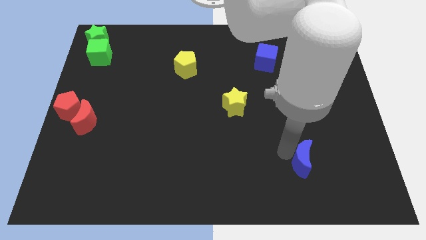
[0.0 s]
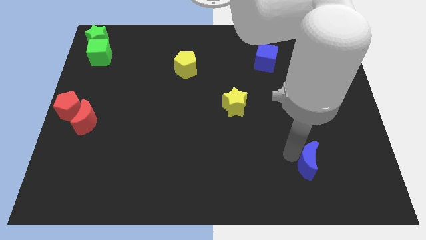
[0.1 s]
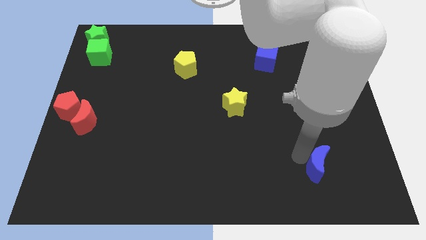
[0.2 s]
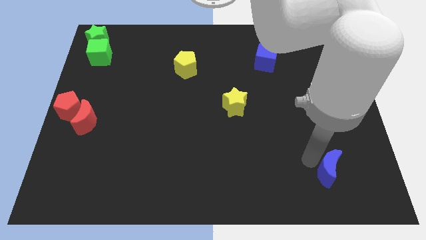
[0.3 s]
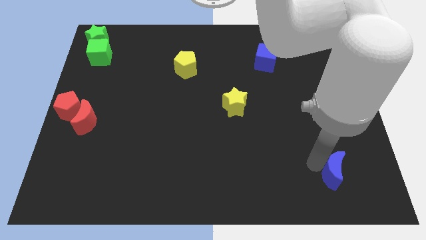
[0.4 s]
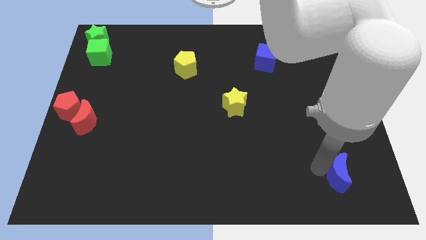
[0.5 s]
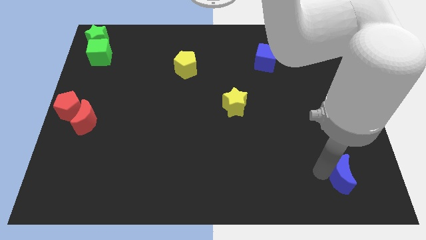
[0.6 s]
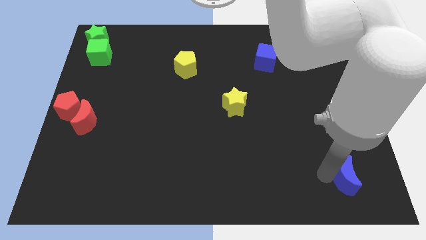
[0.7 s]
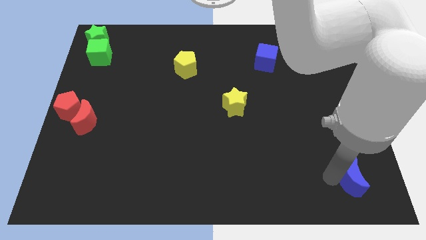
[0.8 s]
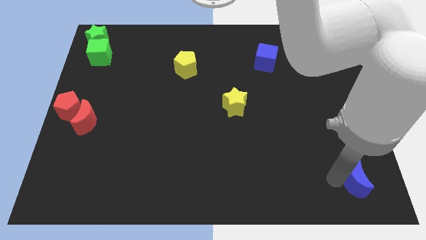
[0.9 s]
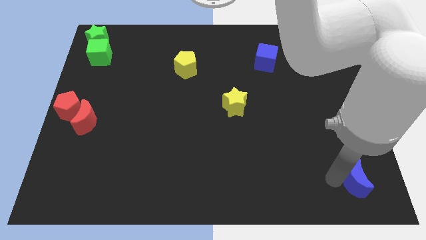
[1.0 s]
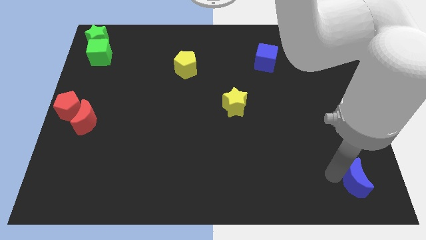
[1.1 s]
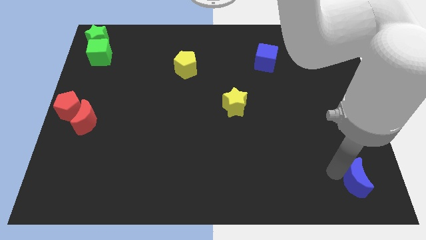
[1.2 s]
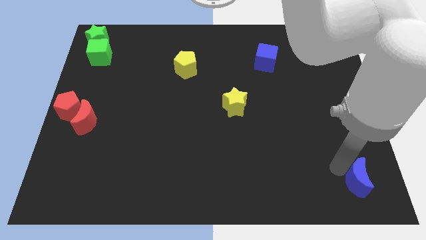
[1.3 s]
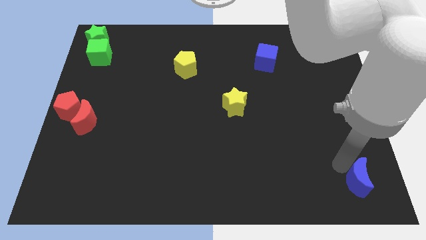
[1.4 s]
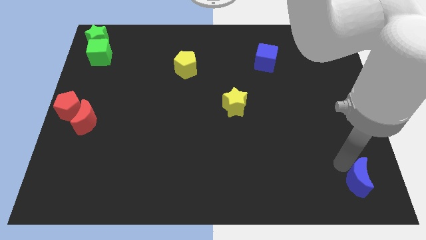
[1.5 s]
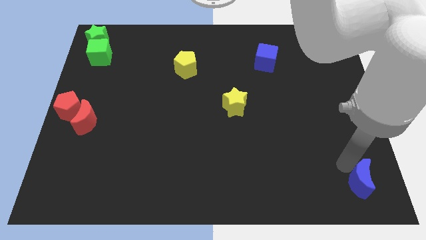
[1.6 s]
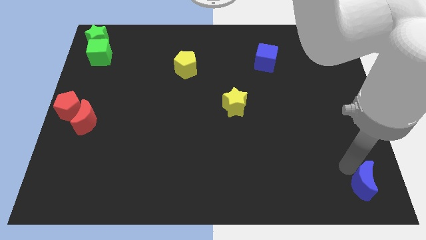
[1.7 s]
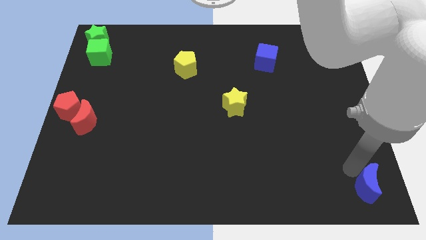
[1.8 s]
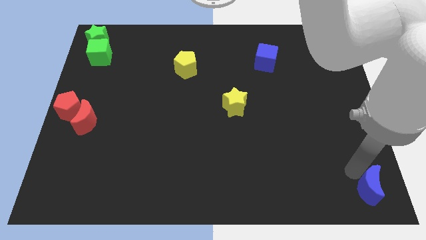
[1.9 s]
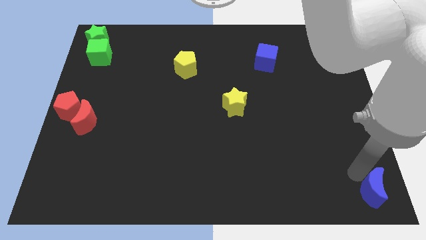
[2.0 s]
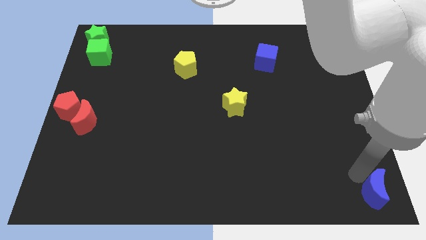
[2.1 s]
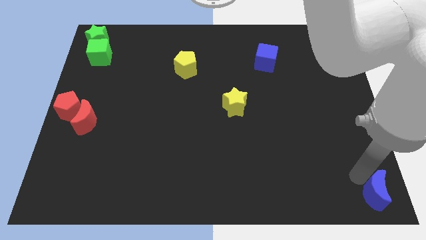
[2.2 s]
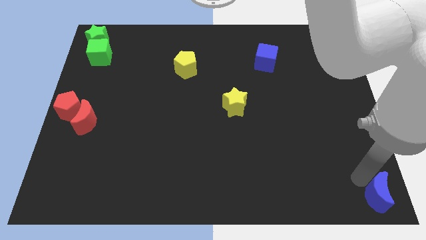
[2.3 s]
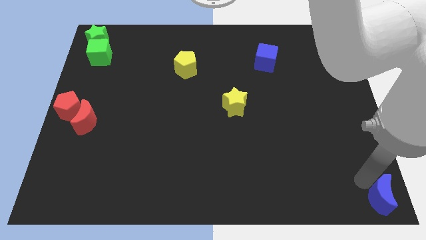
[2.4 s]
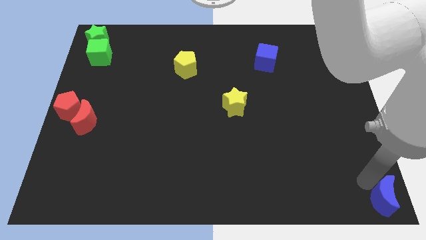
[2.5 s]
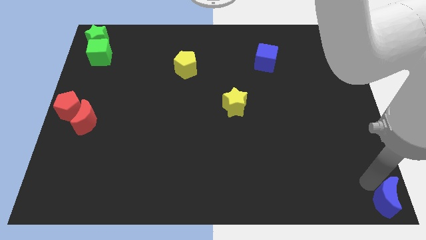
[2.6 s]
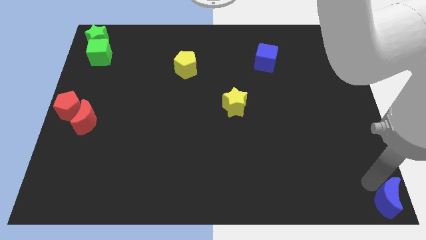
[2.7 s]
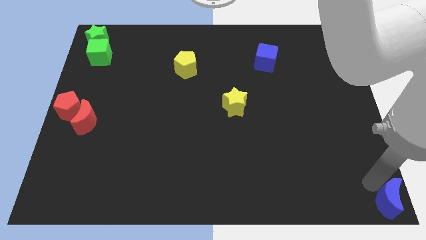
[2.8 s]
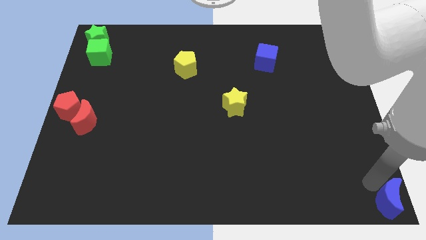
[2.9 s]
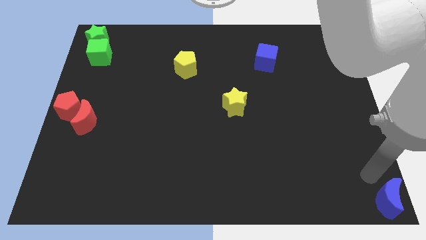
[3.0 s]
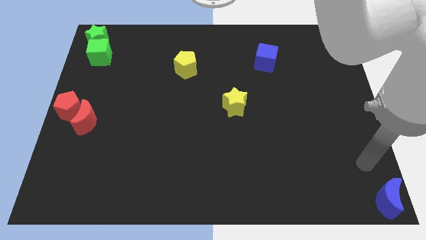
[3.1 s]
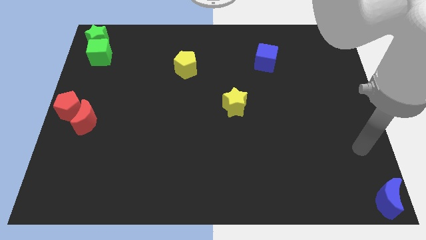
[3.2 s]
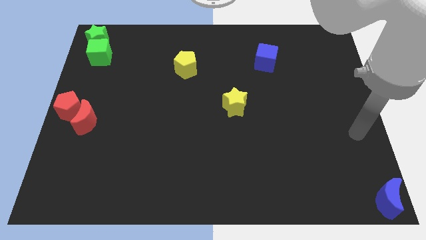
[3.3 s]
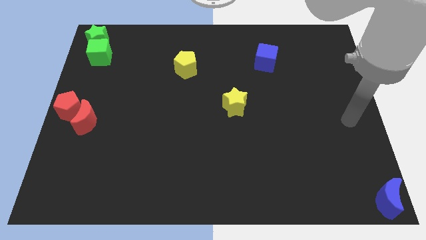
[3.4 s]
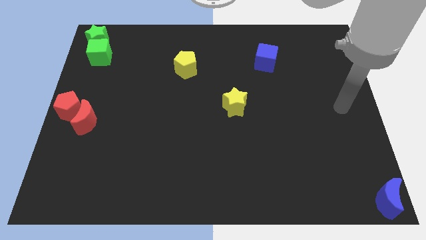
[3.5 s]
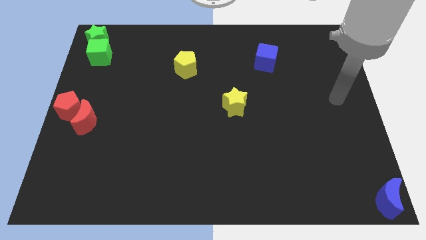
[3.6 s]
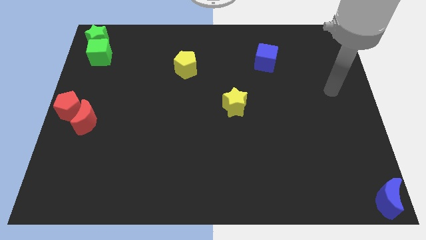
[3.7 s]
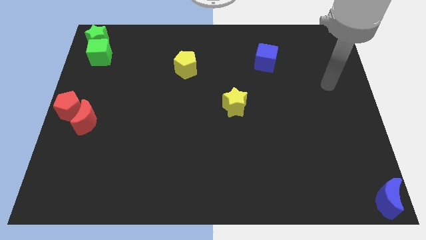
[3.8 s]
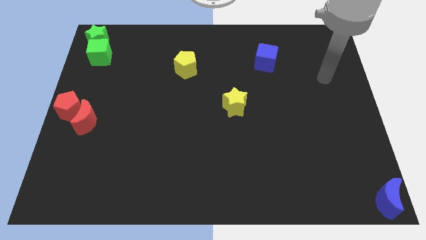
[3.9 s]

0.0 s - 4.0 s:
push the blue crescent to the bottom right corner of the board

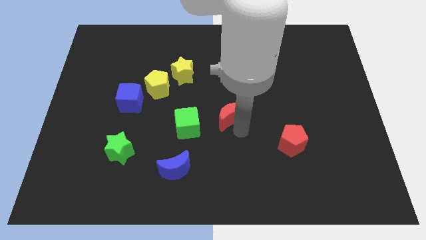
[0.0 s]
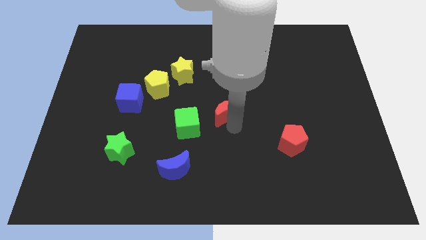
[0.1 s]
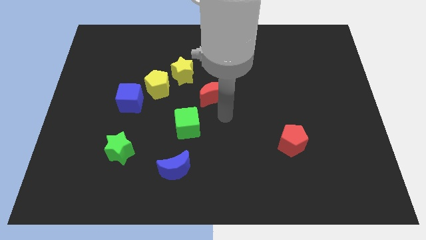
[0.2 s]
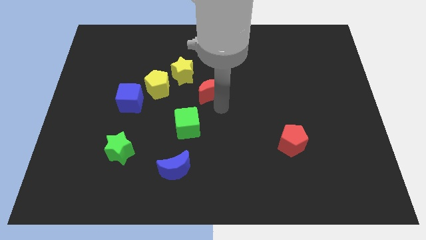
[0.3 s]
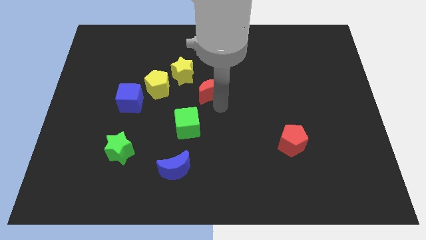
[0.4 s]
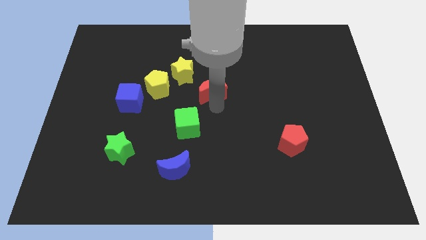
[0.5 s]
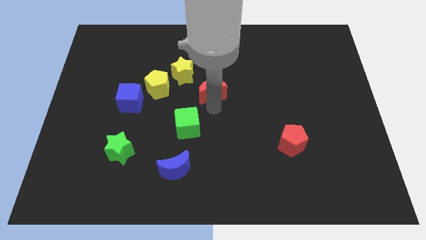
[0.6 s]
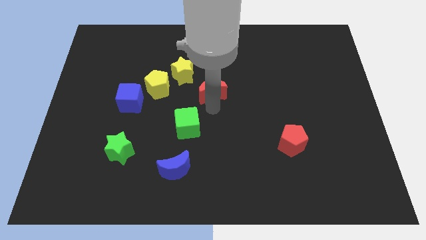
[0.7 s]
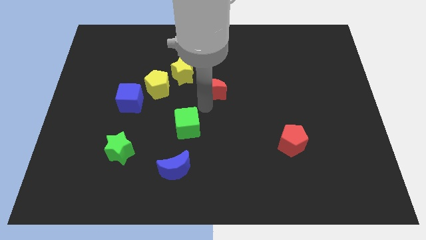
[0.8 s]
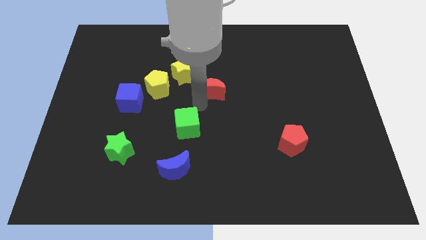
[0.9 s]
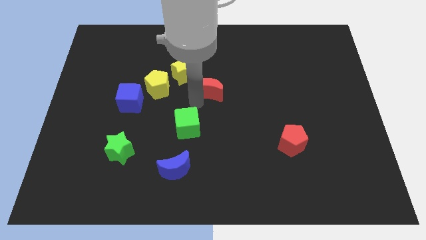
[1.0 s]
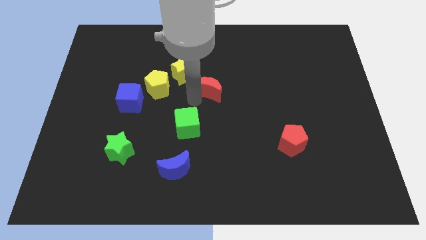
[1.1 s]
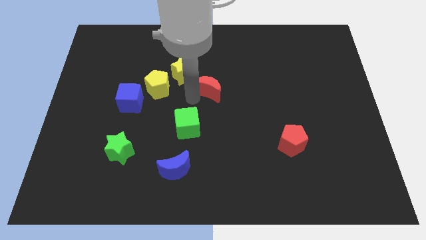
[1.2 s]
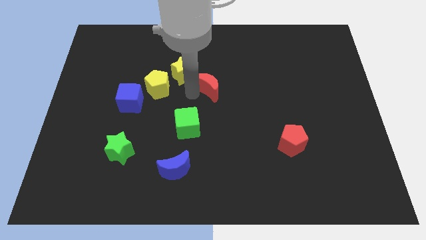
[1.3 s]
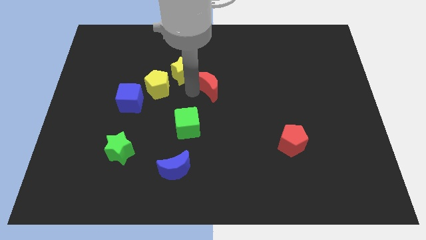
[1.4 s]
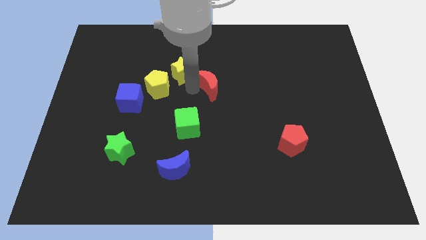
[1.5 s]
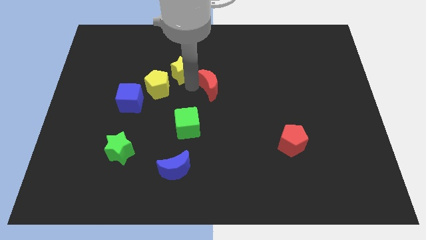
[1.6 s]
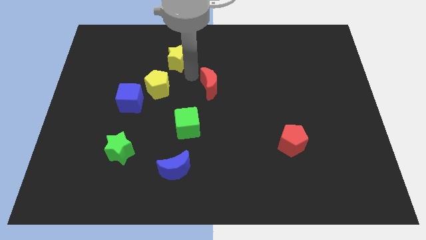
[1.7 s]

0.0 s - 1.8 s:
move the red crescent diagonally to the bottom right of the yellow star

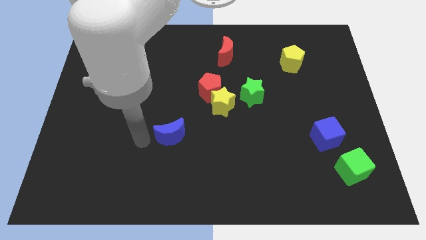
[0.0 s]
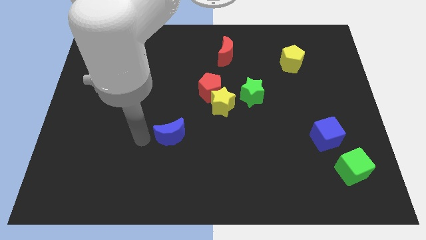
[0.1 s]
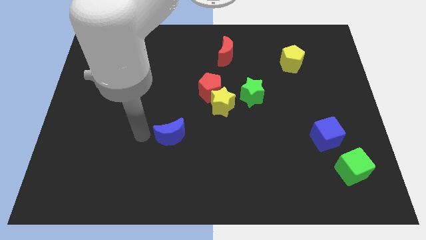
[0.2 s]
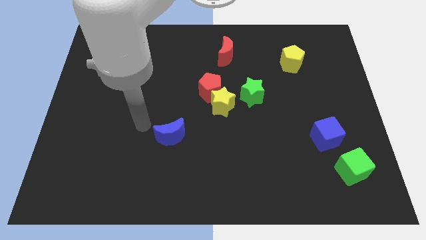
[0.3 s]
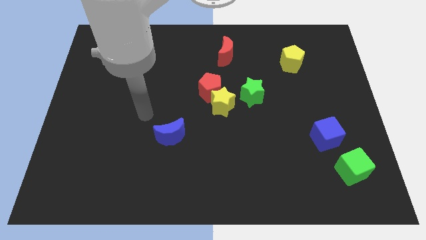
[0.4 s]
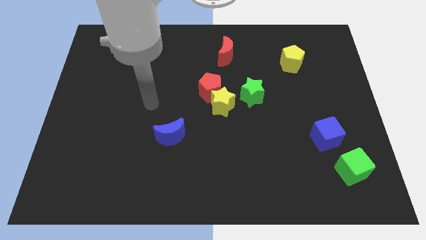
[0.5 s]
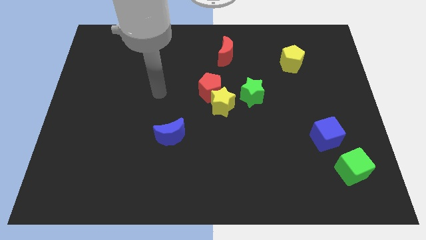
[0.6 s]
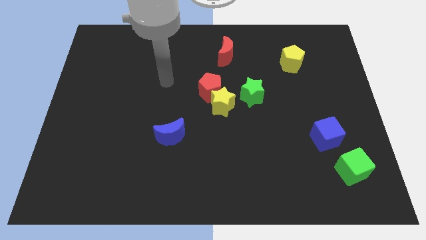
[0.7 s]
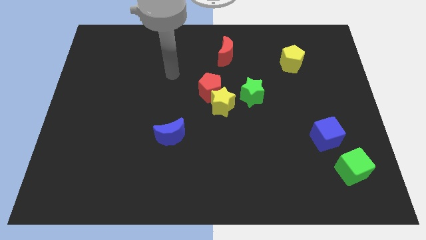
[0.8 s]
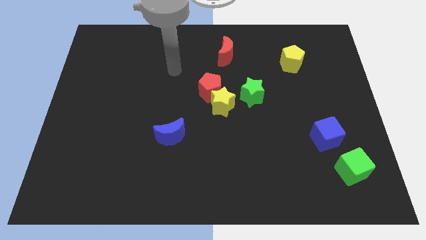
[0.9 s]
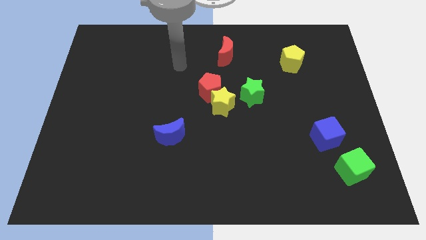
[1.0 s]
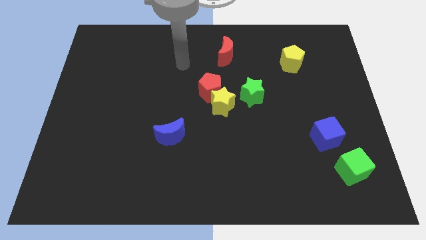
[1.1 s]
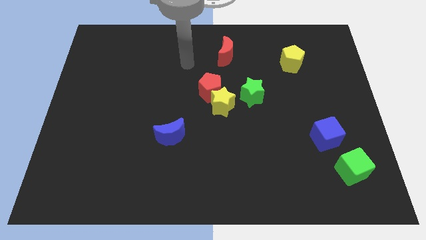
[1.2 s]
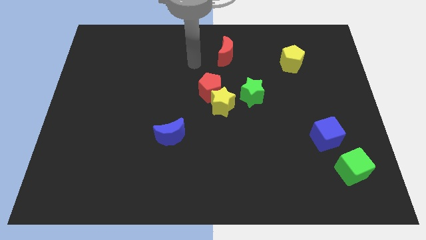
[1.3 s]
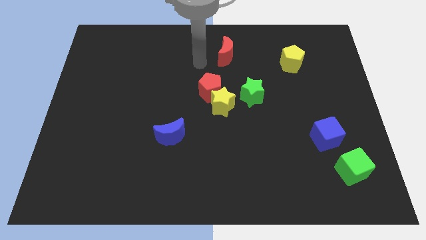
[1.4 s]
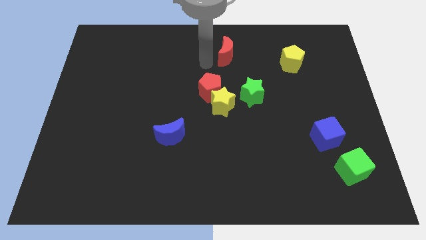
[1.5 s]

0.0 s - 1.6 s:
move your arm towards the red crescent

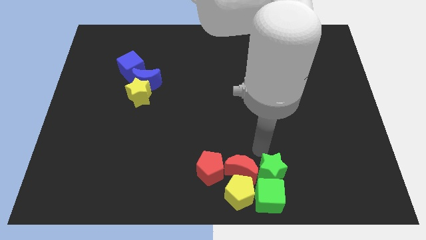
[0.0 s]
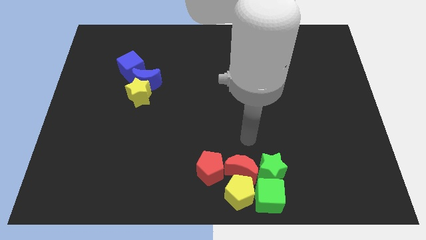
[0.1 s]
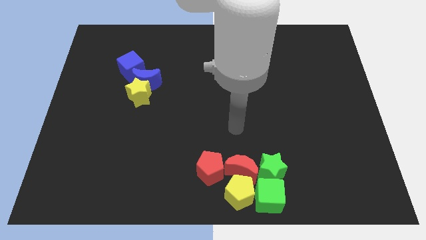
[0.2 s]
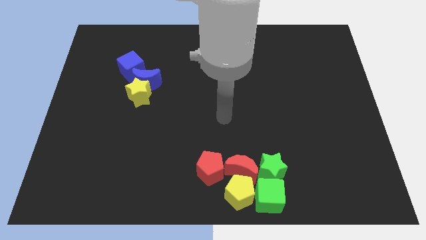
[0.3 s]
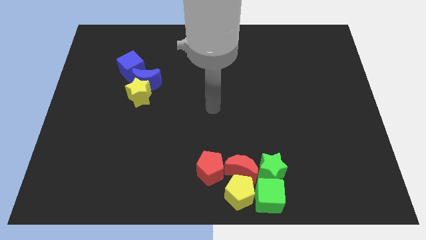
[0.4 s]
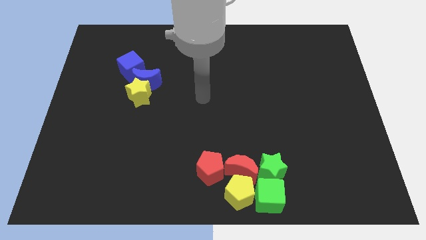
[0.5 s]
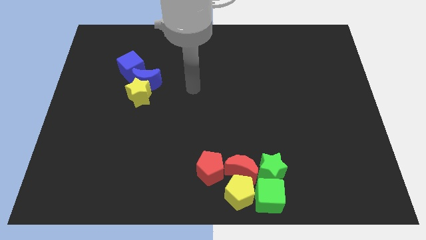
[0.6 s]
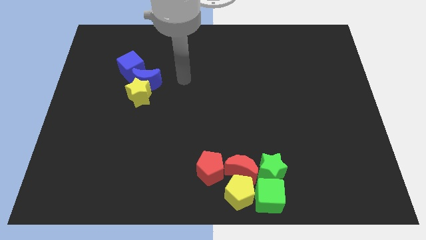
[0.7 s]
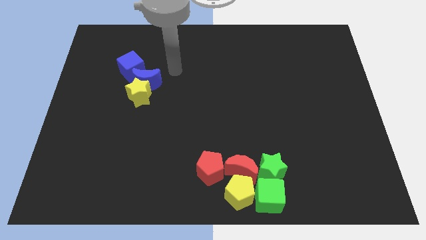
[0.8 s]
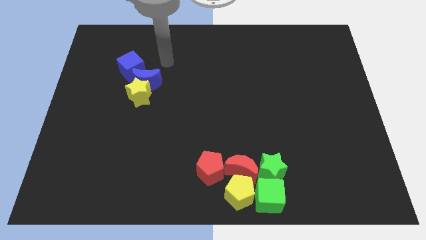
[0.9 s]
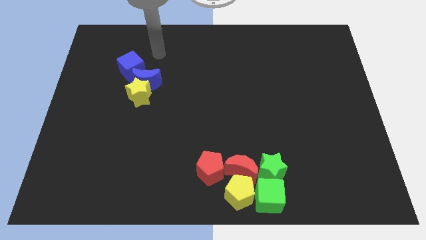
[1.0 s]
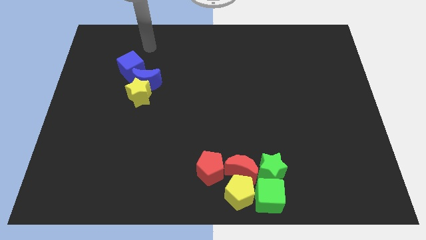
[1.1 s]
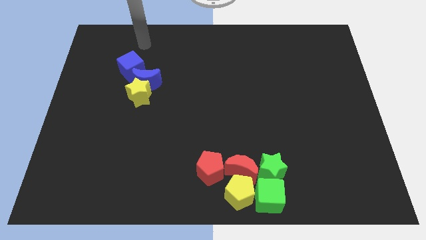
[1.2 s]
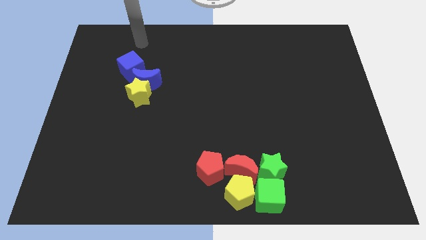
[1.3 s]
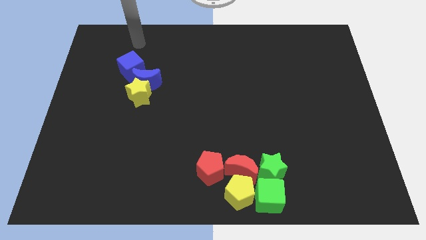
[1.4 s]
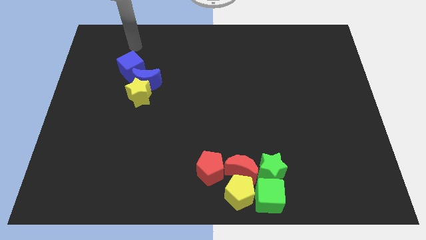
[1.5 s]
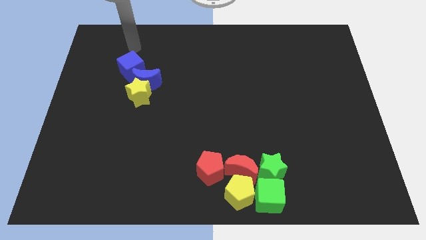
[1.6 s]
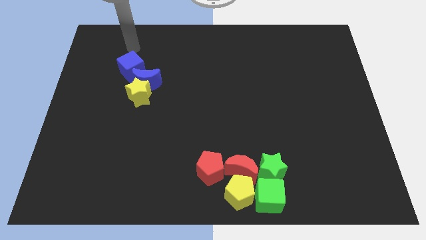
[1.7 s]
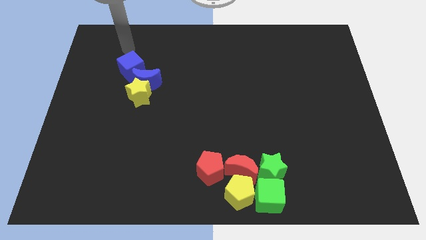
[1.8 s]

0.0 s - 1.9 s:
push your arm at the top of the blue cube

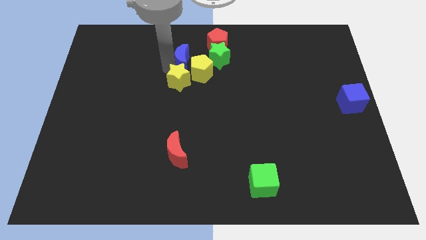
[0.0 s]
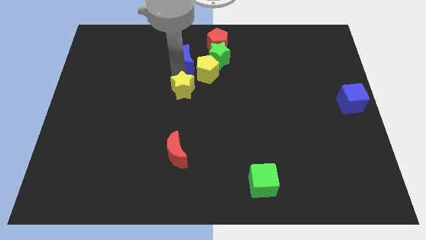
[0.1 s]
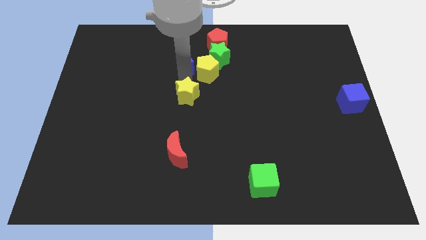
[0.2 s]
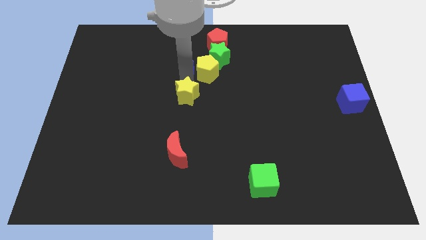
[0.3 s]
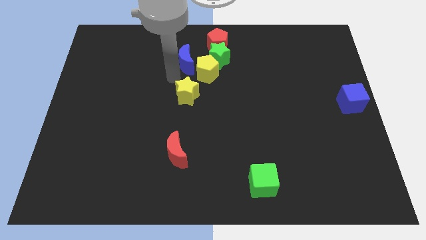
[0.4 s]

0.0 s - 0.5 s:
push yellow star slightly below
